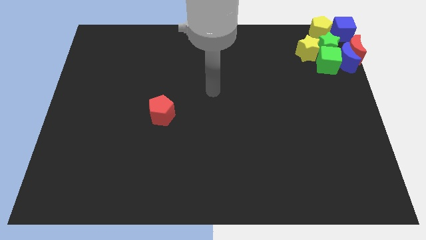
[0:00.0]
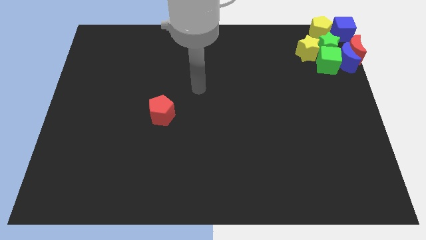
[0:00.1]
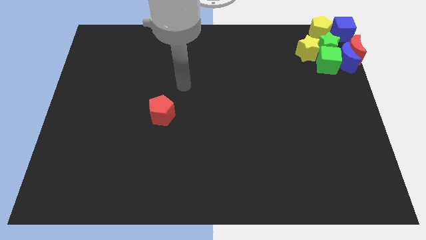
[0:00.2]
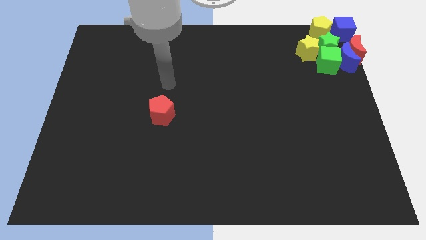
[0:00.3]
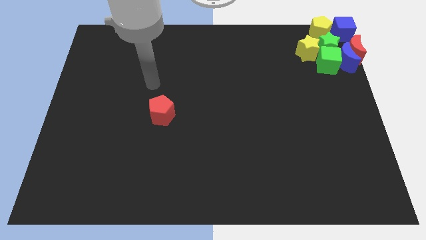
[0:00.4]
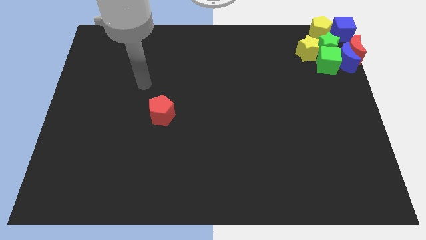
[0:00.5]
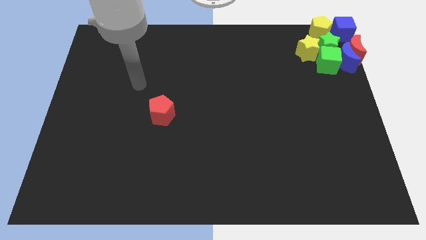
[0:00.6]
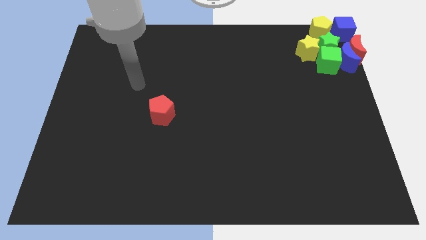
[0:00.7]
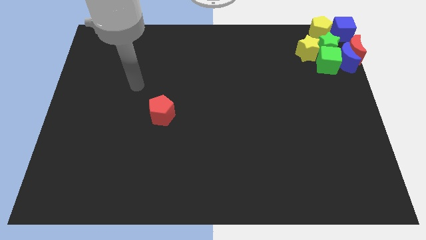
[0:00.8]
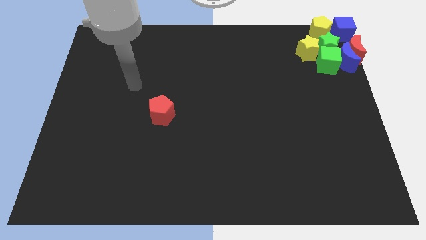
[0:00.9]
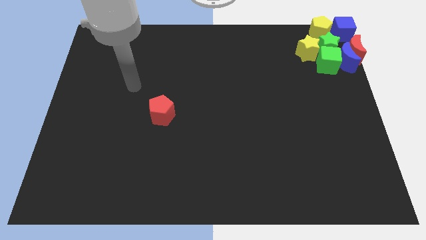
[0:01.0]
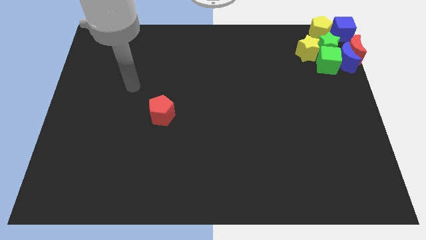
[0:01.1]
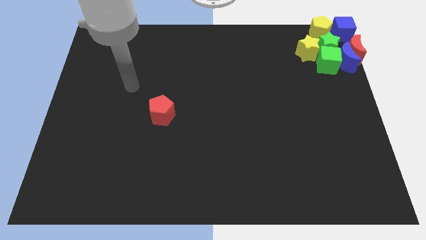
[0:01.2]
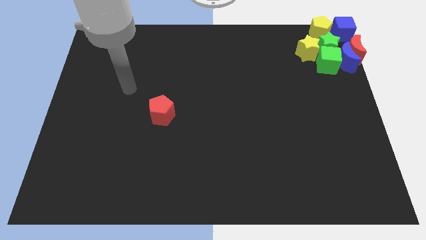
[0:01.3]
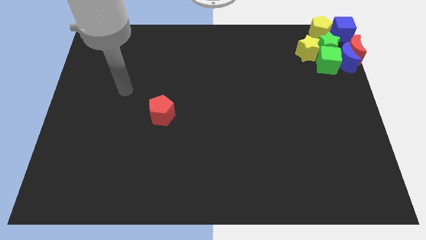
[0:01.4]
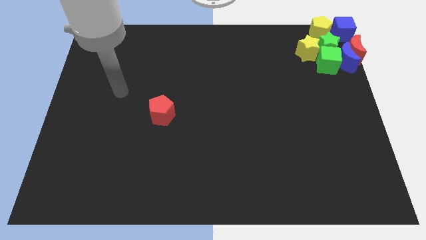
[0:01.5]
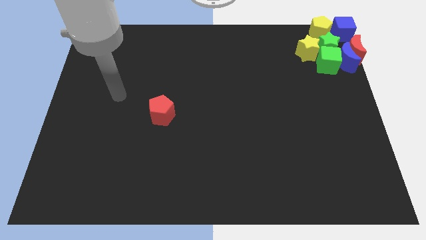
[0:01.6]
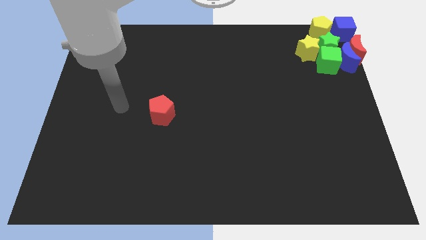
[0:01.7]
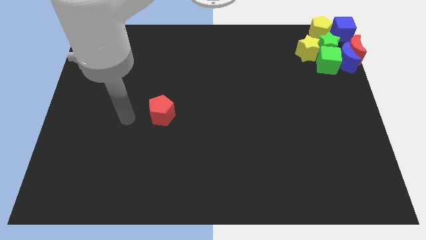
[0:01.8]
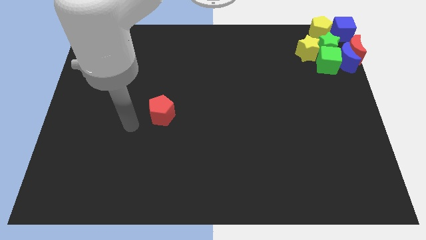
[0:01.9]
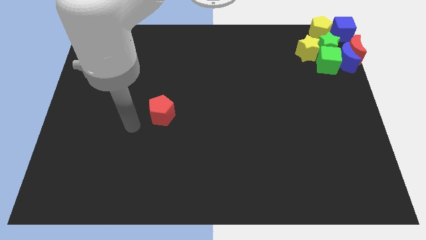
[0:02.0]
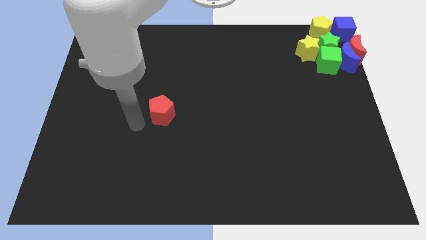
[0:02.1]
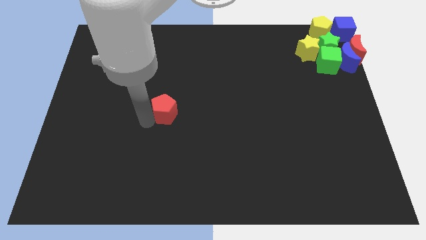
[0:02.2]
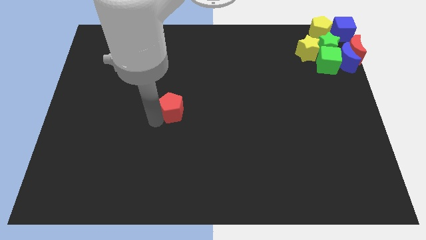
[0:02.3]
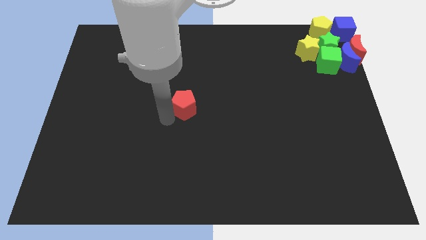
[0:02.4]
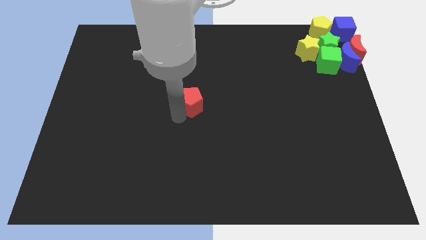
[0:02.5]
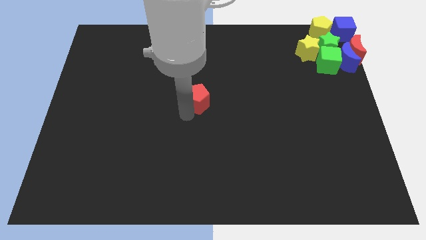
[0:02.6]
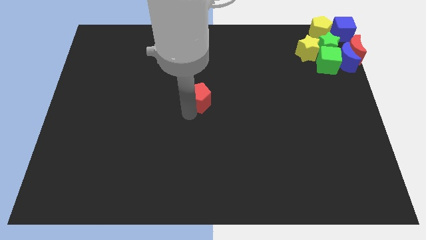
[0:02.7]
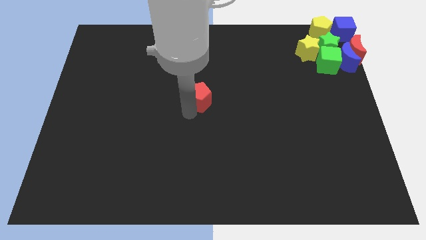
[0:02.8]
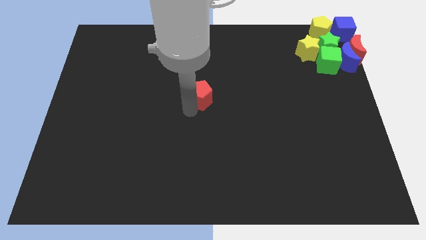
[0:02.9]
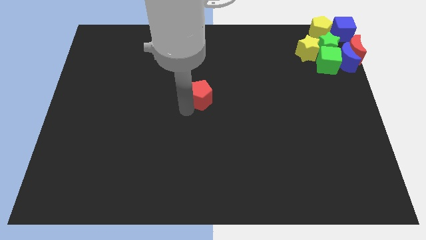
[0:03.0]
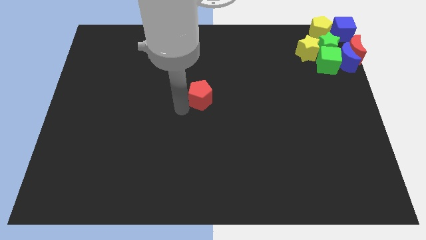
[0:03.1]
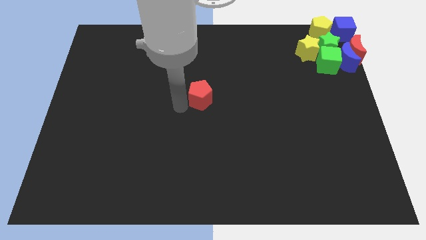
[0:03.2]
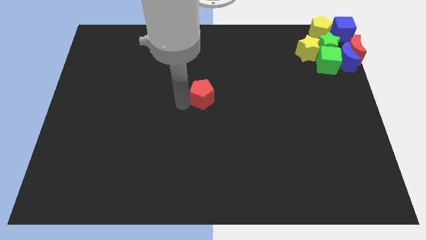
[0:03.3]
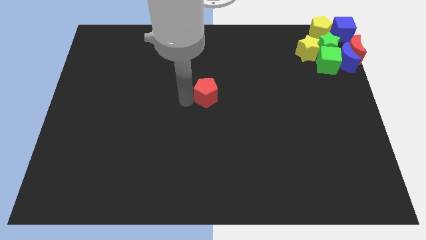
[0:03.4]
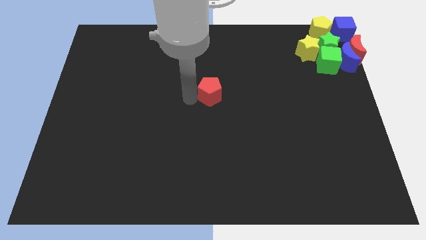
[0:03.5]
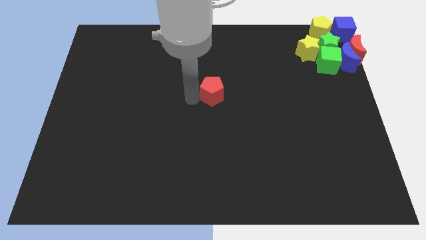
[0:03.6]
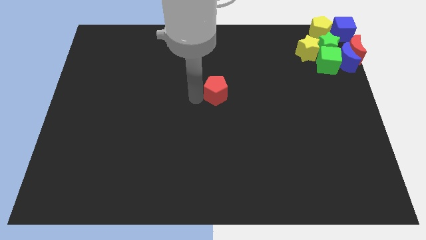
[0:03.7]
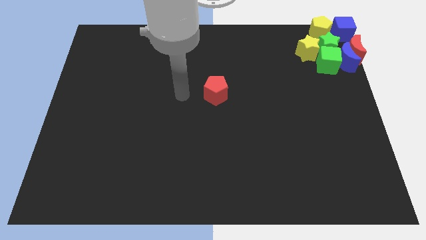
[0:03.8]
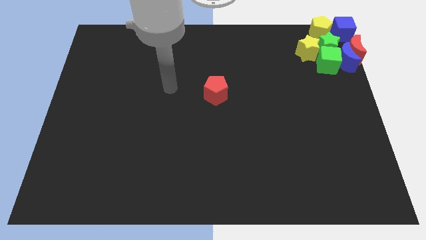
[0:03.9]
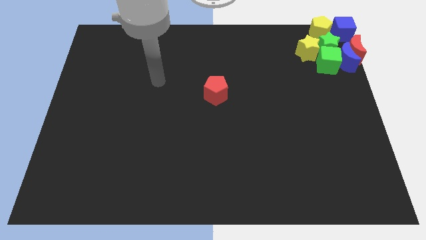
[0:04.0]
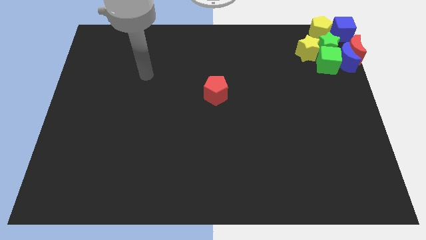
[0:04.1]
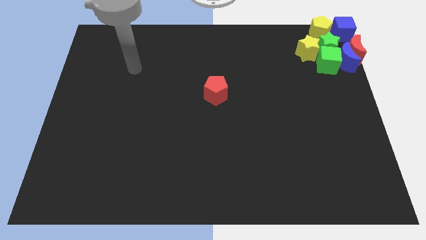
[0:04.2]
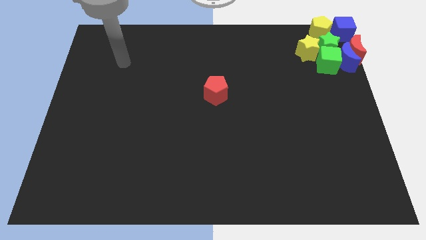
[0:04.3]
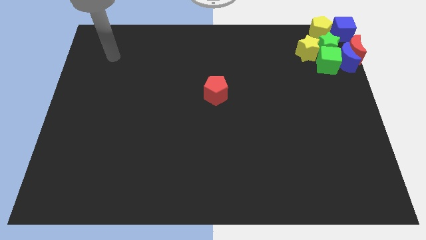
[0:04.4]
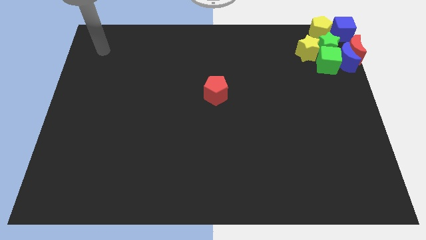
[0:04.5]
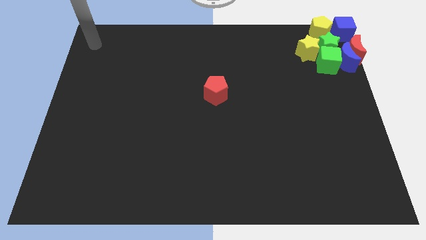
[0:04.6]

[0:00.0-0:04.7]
move the red pentagon towards the center of board

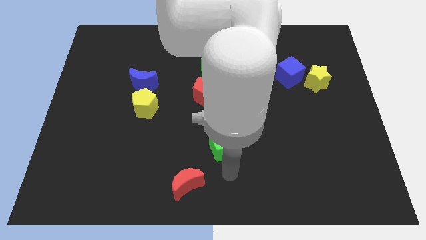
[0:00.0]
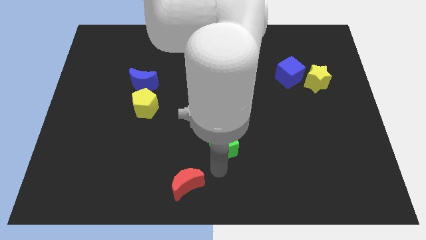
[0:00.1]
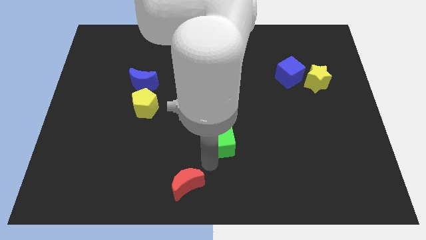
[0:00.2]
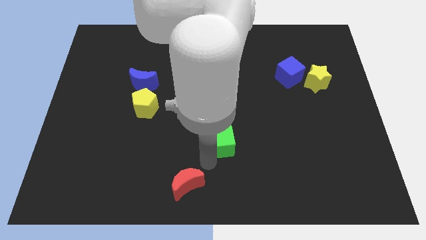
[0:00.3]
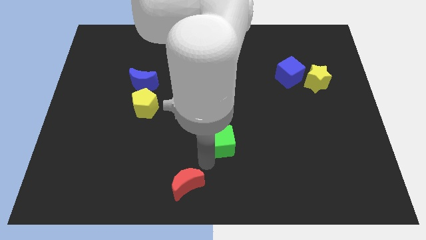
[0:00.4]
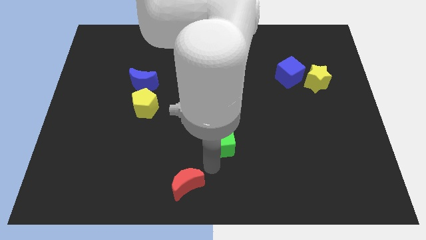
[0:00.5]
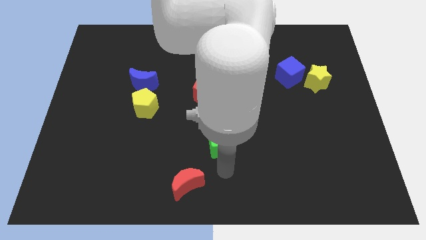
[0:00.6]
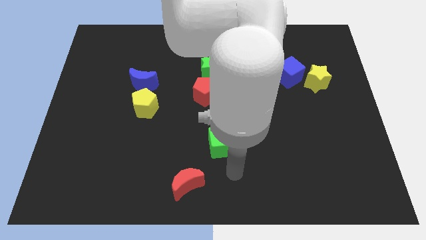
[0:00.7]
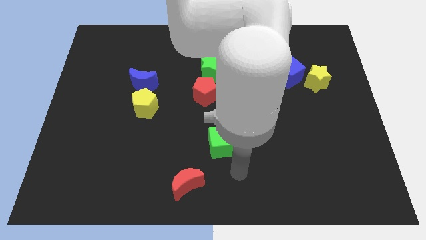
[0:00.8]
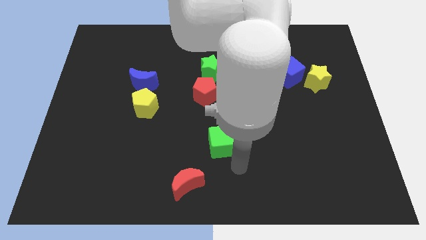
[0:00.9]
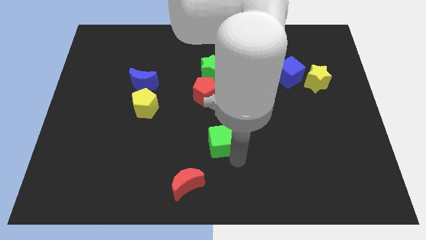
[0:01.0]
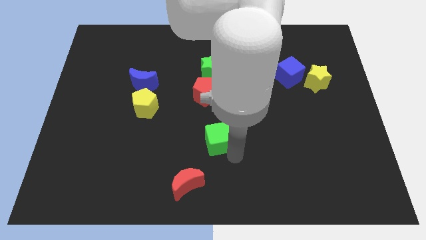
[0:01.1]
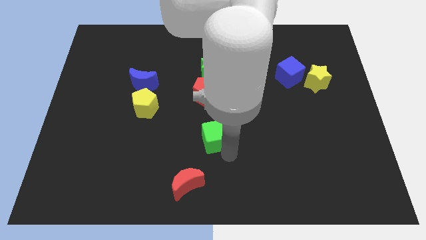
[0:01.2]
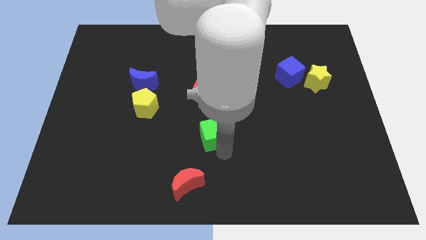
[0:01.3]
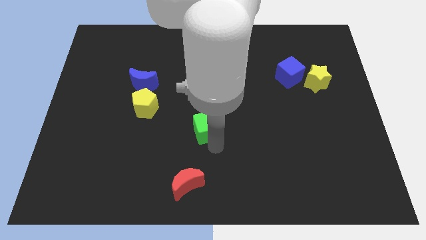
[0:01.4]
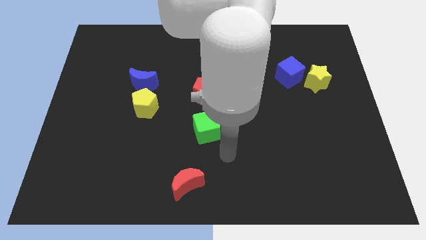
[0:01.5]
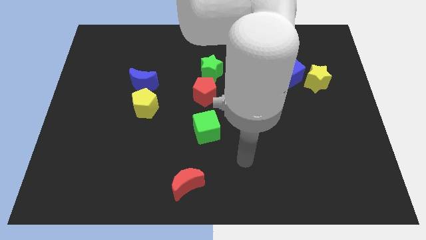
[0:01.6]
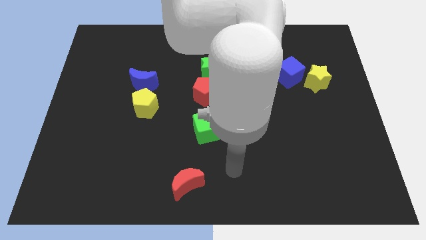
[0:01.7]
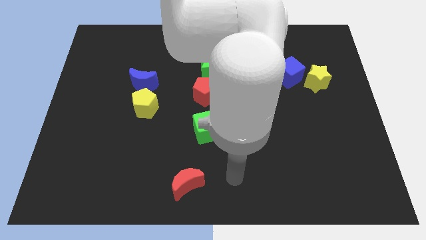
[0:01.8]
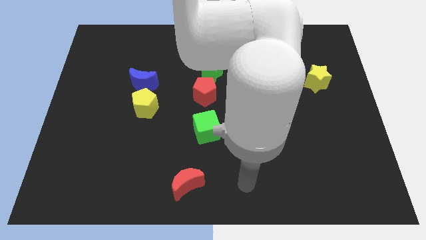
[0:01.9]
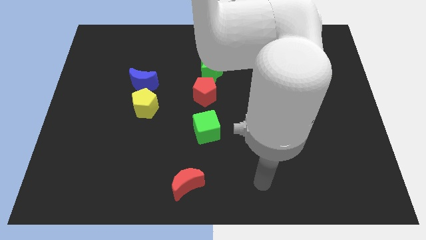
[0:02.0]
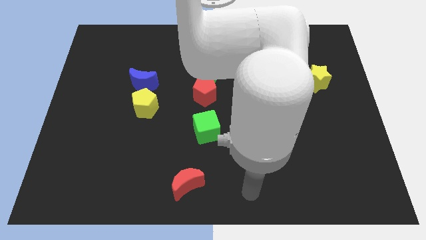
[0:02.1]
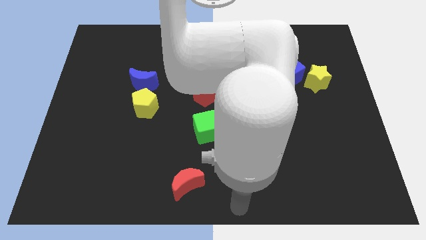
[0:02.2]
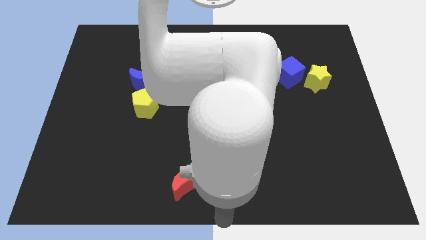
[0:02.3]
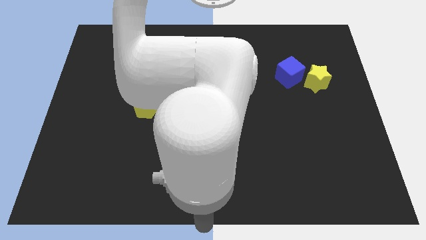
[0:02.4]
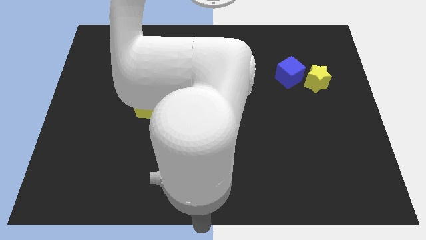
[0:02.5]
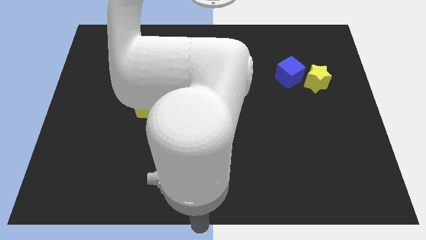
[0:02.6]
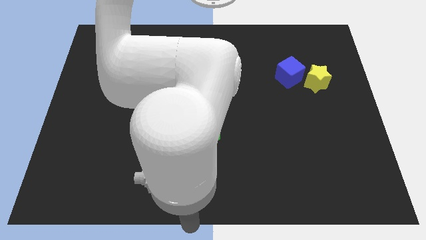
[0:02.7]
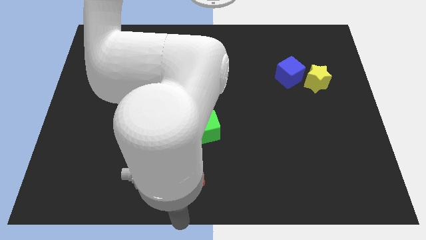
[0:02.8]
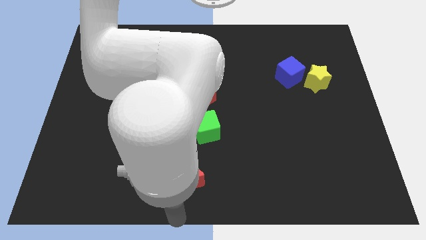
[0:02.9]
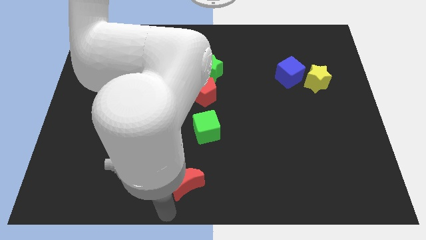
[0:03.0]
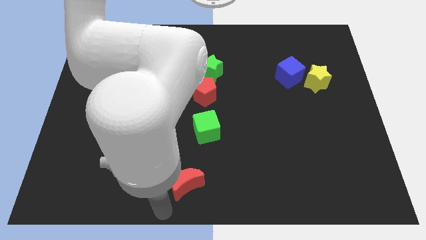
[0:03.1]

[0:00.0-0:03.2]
move the green cube vertically at the bottom of the red pentagon

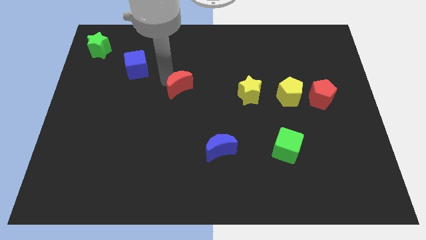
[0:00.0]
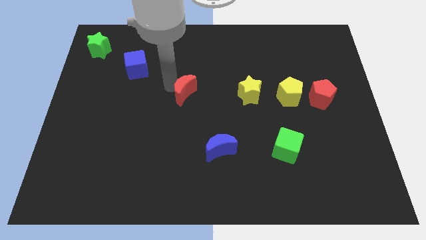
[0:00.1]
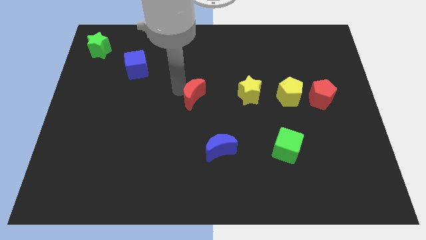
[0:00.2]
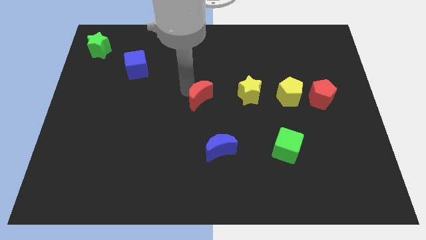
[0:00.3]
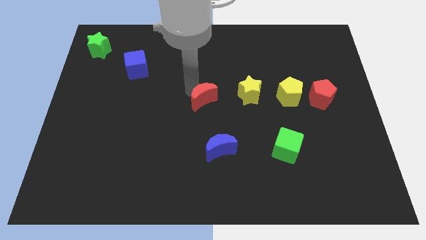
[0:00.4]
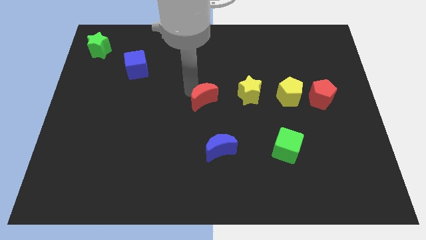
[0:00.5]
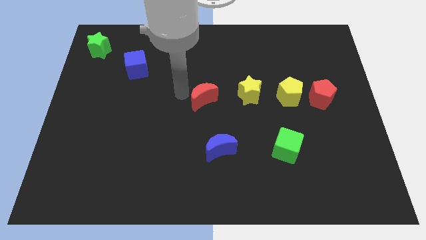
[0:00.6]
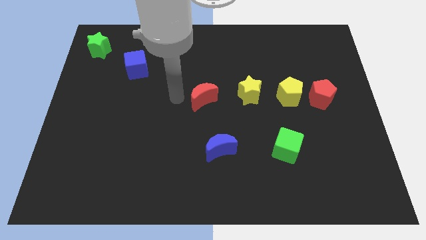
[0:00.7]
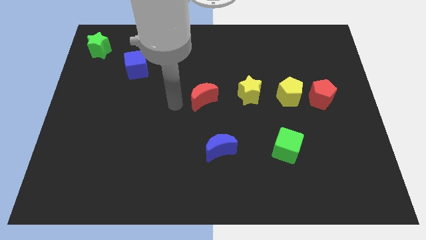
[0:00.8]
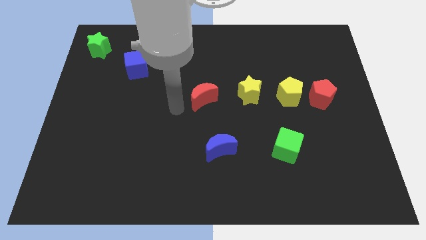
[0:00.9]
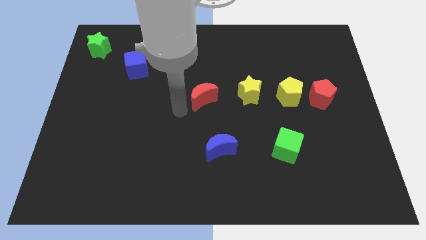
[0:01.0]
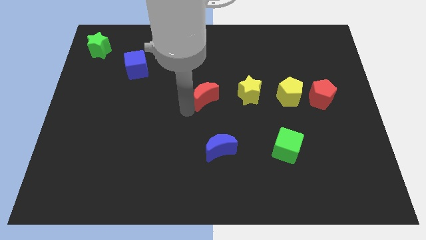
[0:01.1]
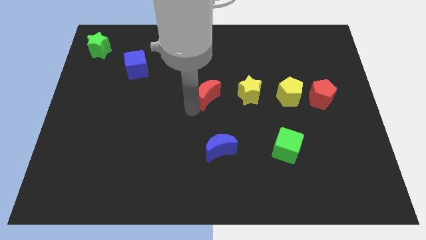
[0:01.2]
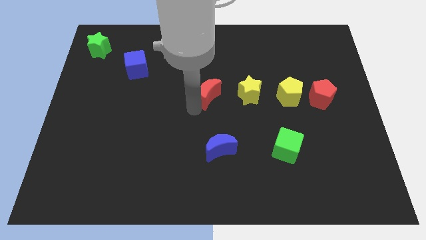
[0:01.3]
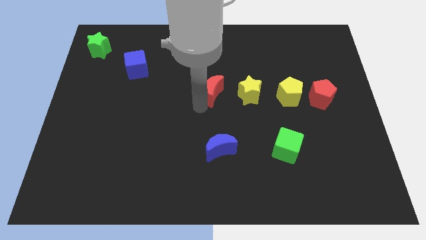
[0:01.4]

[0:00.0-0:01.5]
place the red crescent left to the yellow star to form a horizontal line
